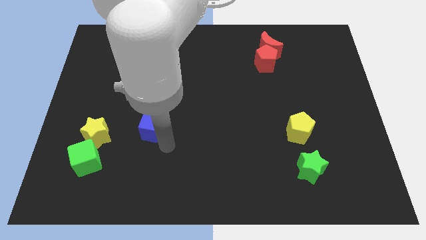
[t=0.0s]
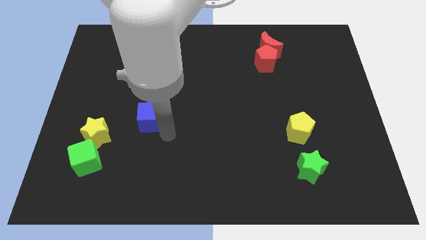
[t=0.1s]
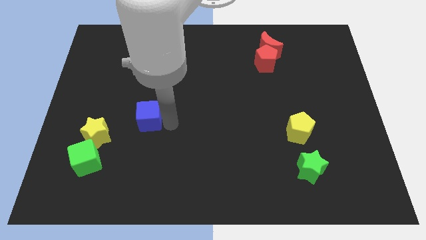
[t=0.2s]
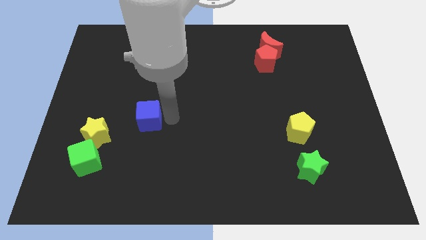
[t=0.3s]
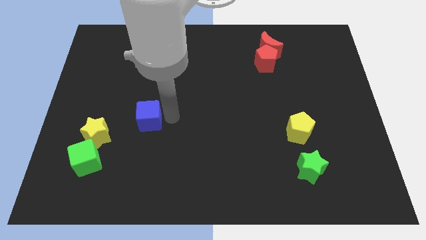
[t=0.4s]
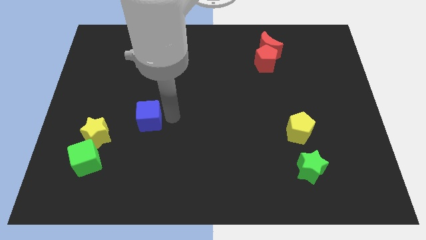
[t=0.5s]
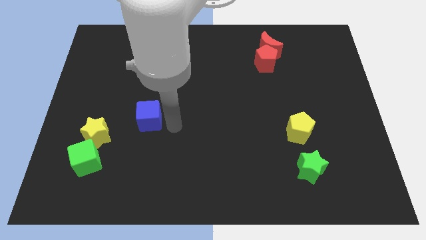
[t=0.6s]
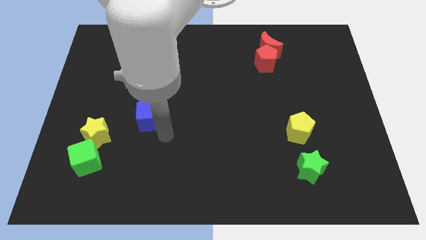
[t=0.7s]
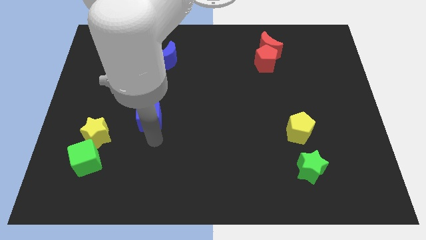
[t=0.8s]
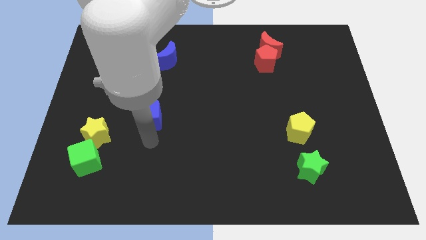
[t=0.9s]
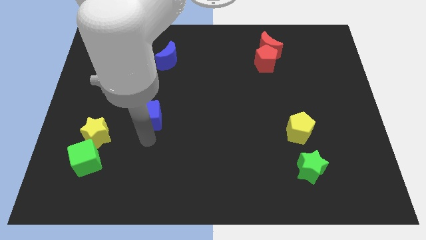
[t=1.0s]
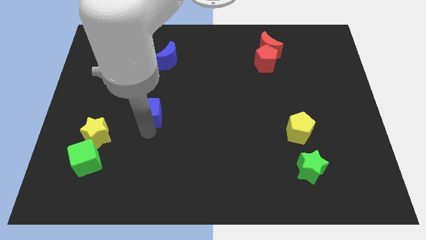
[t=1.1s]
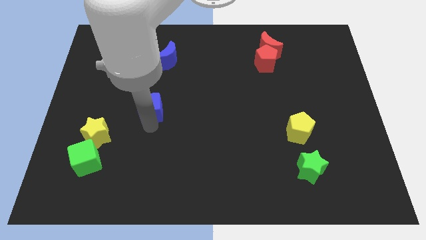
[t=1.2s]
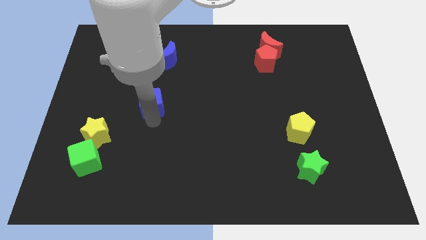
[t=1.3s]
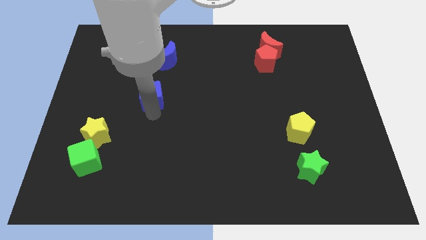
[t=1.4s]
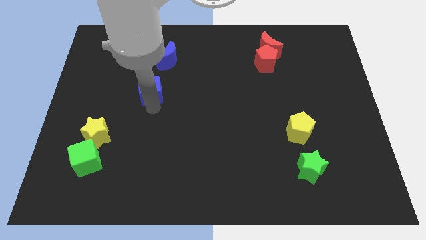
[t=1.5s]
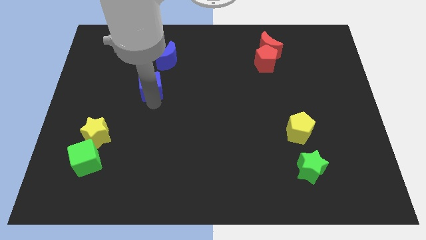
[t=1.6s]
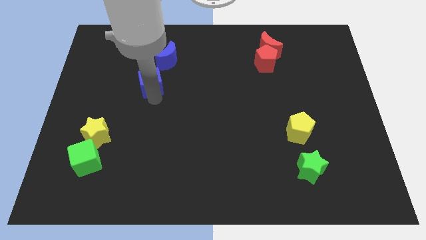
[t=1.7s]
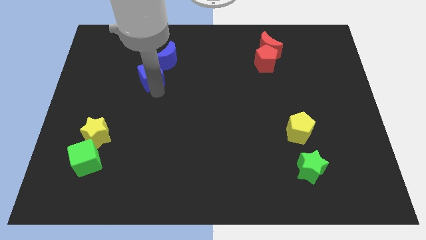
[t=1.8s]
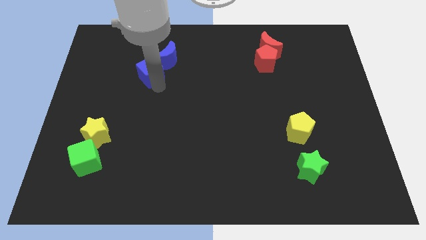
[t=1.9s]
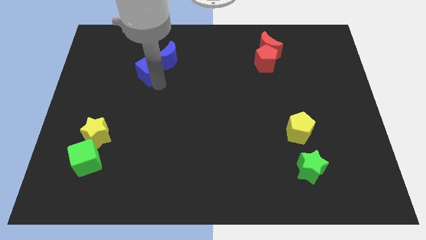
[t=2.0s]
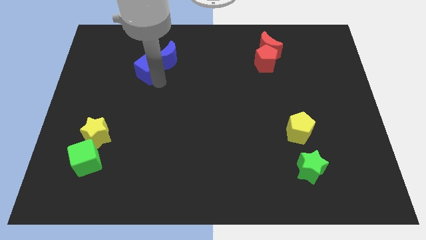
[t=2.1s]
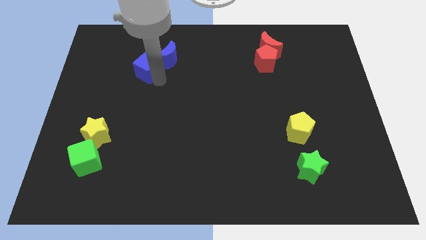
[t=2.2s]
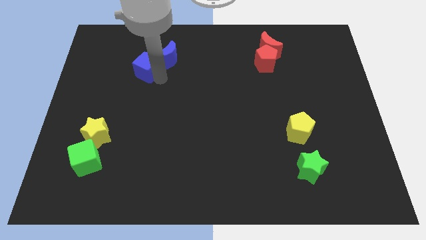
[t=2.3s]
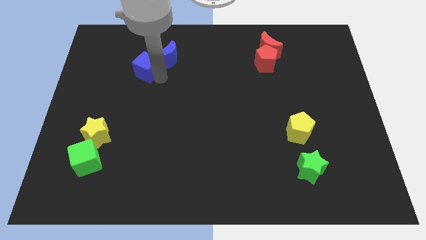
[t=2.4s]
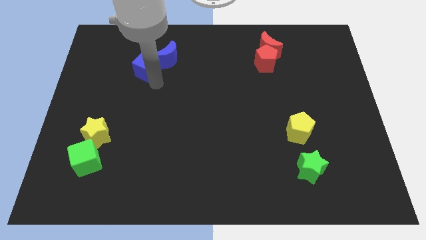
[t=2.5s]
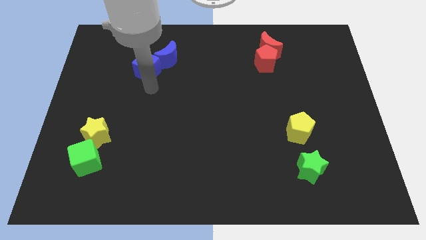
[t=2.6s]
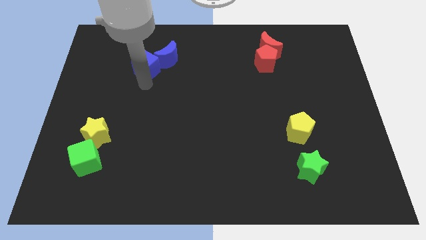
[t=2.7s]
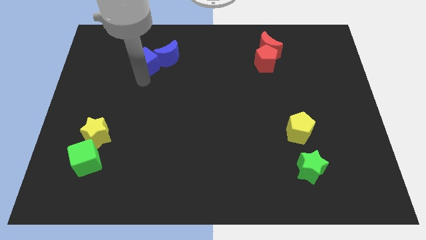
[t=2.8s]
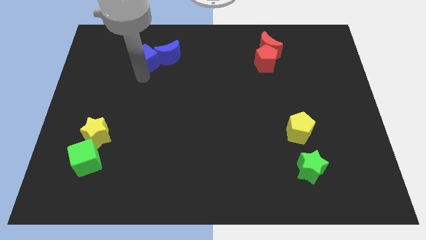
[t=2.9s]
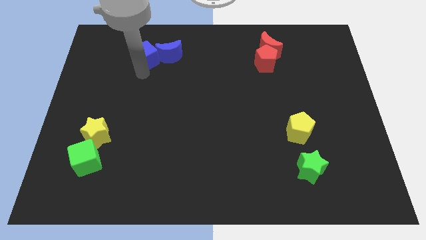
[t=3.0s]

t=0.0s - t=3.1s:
push blue cube in to blue moon

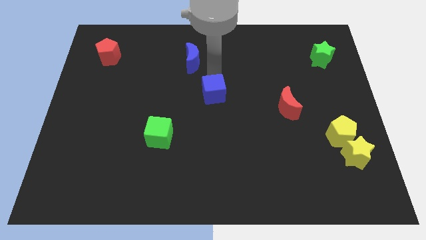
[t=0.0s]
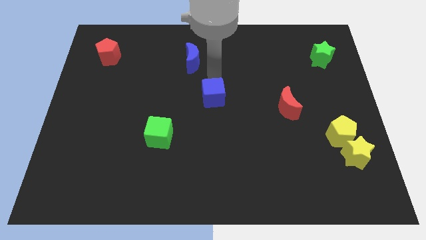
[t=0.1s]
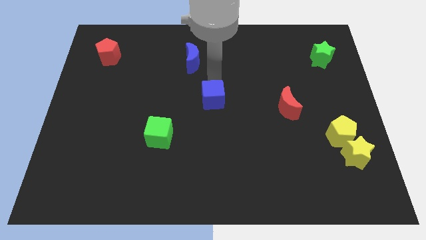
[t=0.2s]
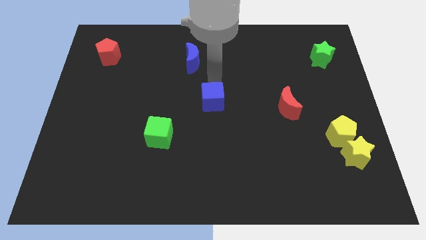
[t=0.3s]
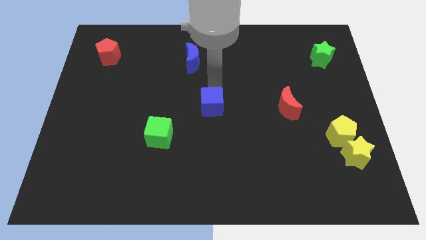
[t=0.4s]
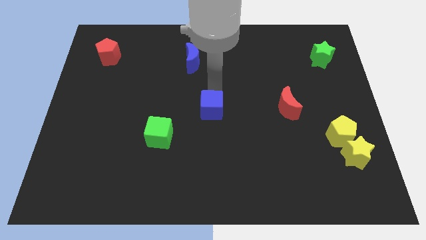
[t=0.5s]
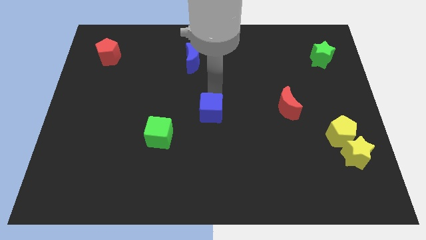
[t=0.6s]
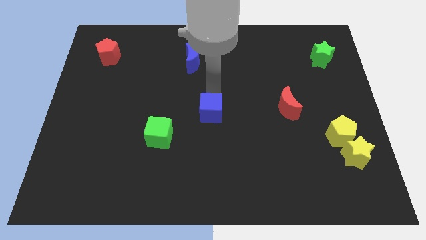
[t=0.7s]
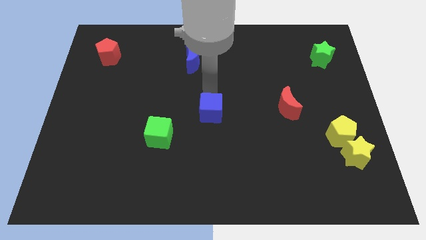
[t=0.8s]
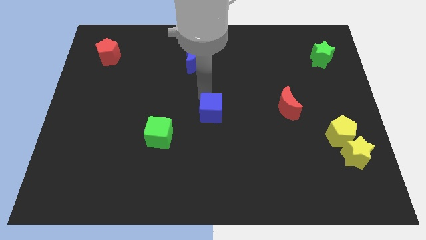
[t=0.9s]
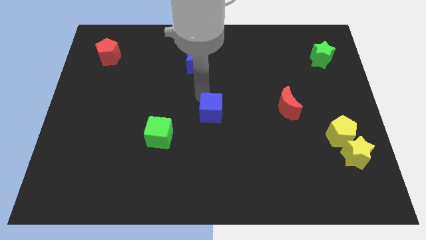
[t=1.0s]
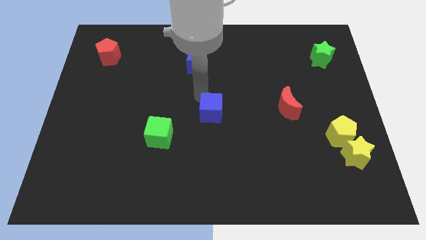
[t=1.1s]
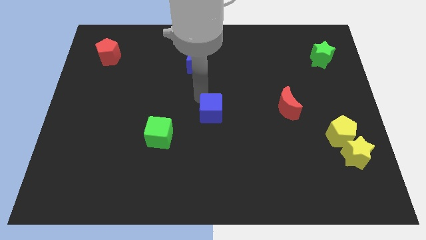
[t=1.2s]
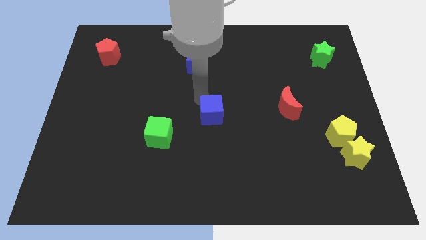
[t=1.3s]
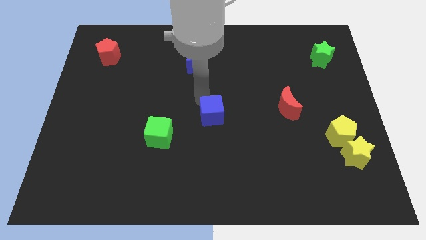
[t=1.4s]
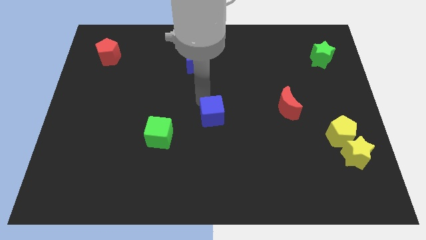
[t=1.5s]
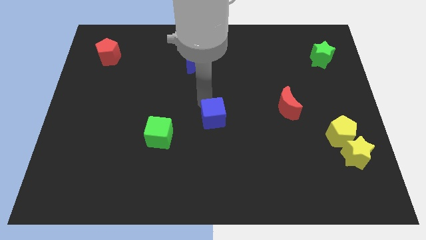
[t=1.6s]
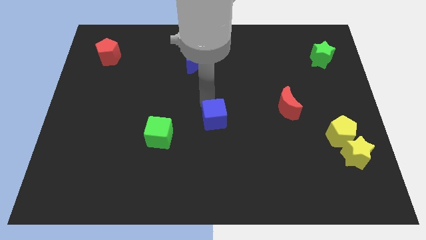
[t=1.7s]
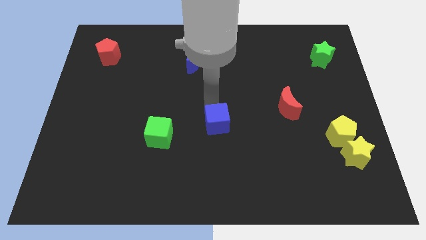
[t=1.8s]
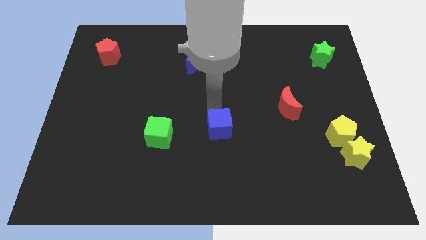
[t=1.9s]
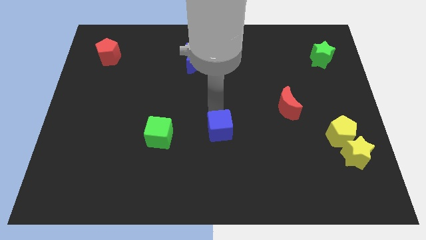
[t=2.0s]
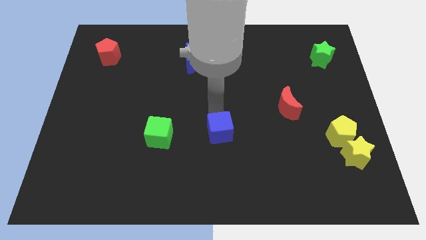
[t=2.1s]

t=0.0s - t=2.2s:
place the blue cube horizontally to right side of the green cube

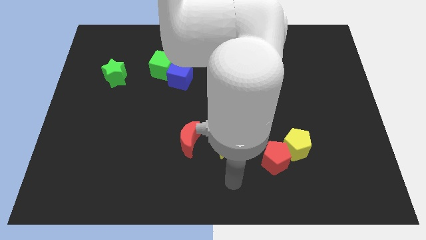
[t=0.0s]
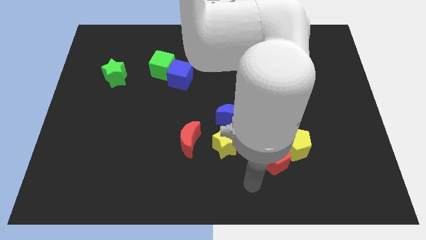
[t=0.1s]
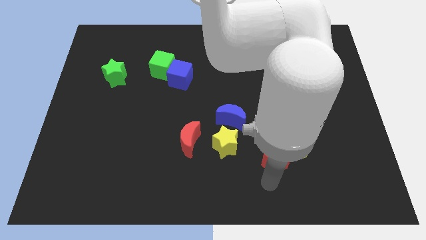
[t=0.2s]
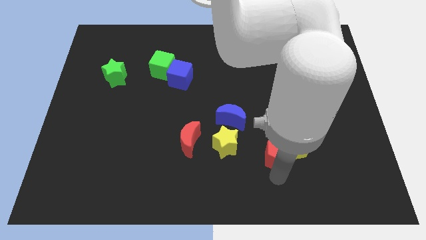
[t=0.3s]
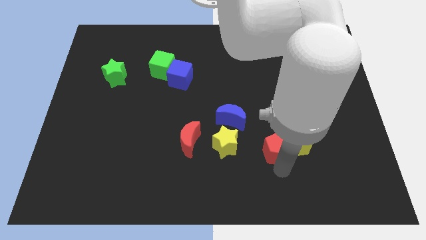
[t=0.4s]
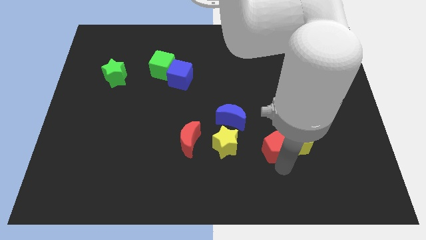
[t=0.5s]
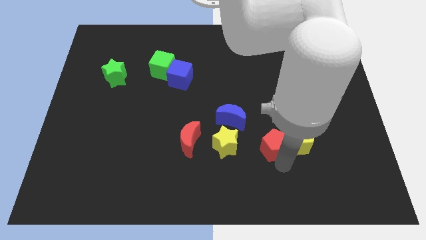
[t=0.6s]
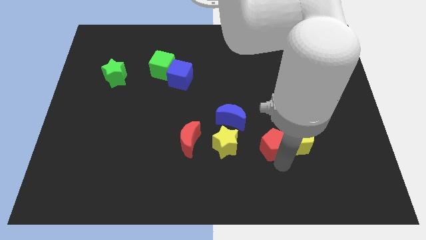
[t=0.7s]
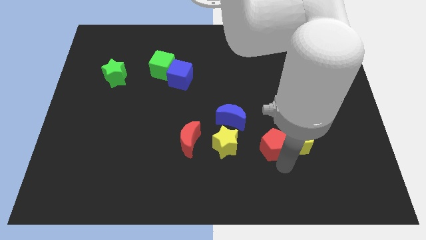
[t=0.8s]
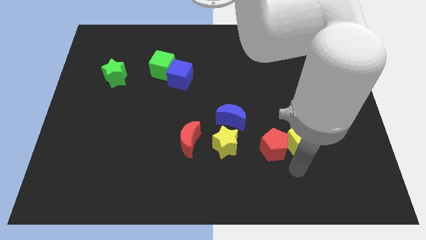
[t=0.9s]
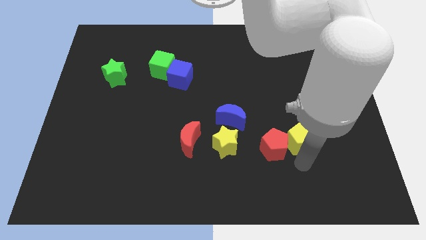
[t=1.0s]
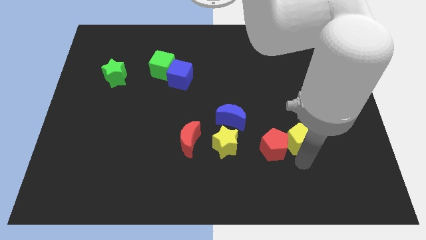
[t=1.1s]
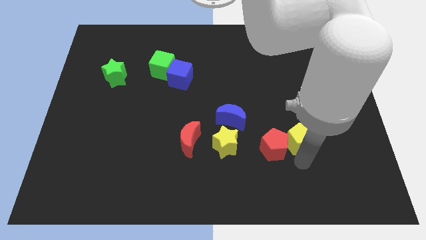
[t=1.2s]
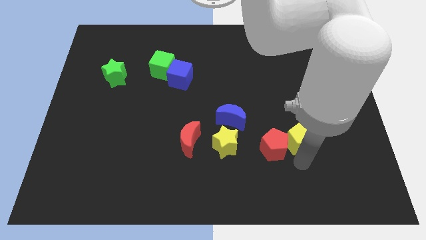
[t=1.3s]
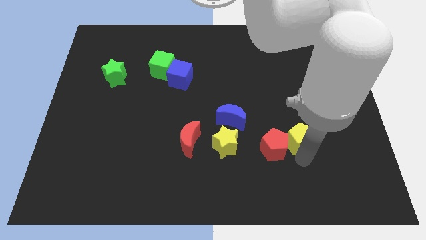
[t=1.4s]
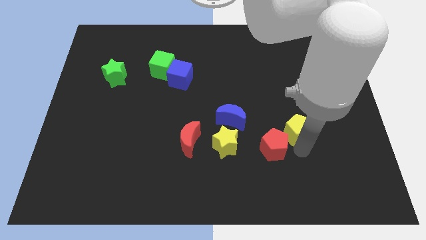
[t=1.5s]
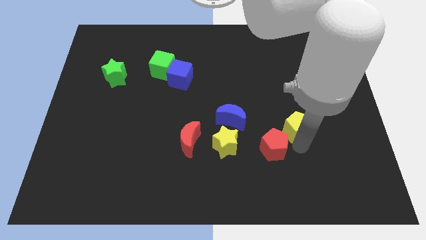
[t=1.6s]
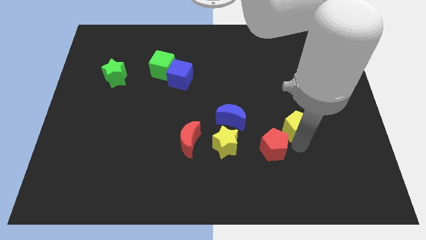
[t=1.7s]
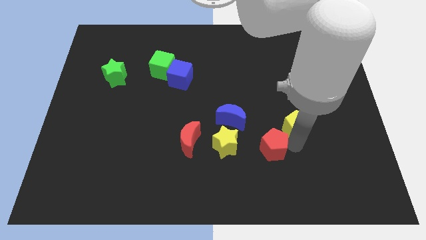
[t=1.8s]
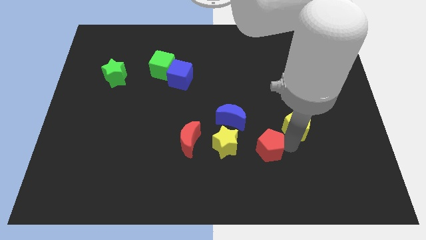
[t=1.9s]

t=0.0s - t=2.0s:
move arm between yellow and red pentagon

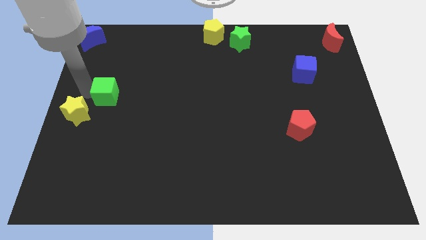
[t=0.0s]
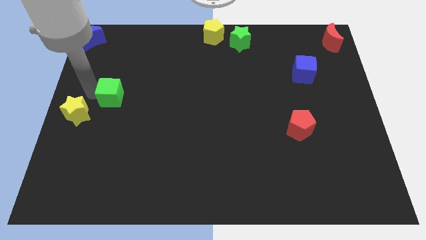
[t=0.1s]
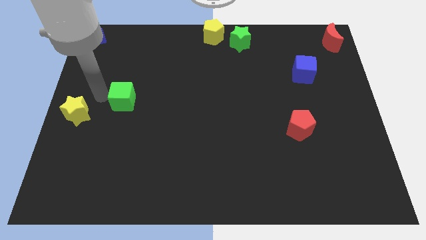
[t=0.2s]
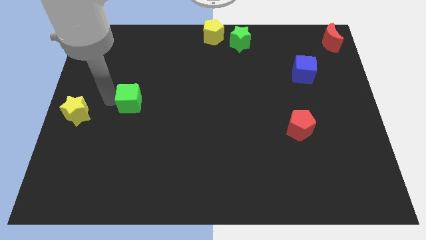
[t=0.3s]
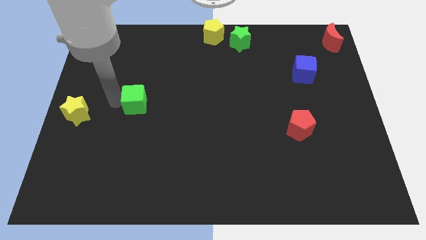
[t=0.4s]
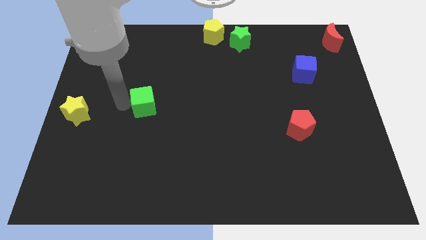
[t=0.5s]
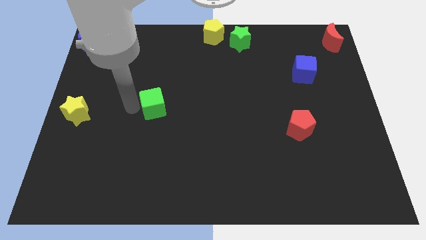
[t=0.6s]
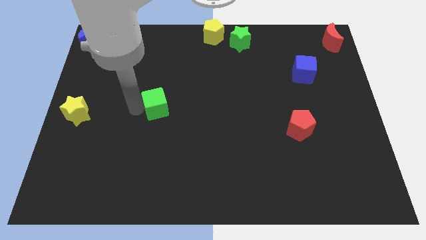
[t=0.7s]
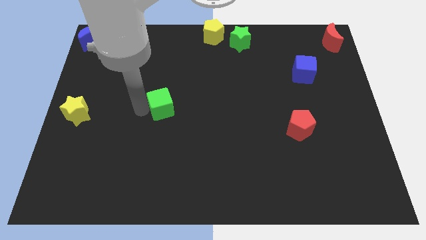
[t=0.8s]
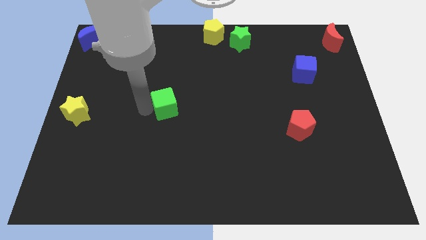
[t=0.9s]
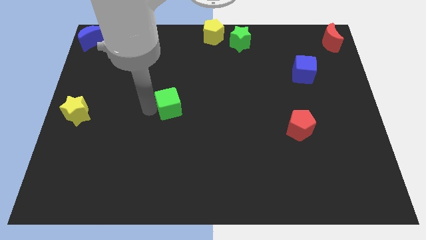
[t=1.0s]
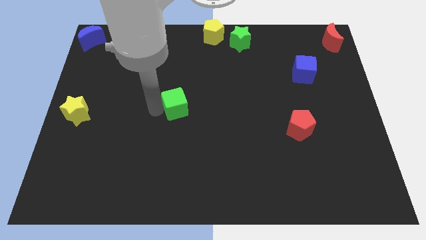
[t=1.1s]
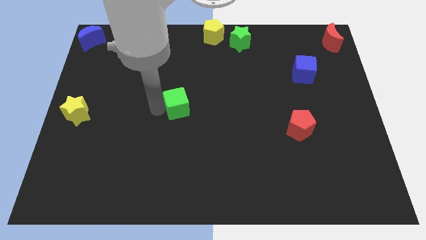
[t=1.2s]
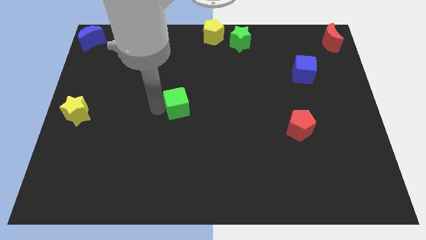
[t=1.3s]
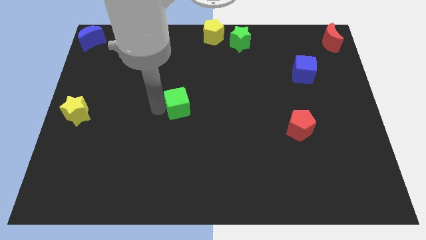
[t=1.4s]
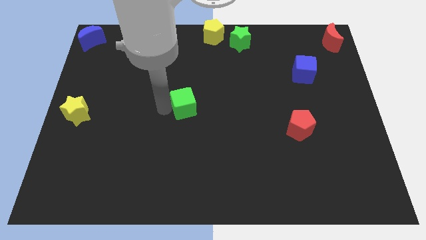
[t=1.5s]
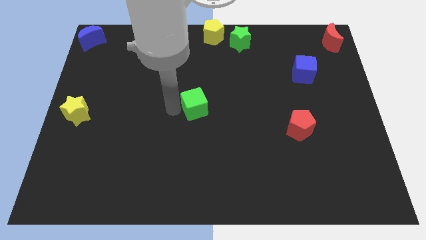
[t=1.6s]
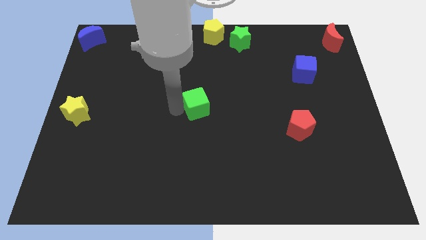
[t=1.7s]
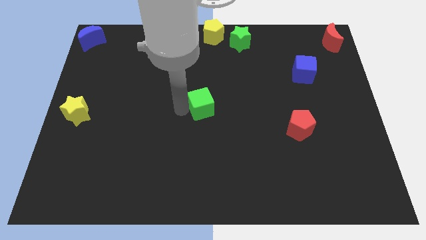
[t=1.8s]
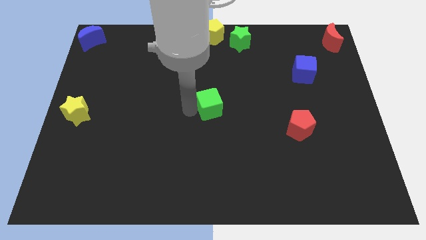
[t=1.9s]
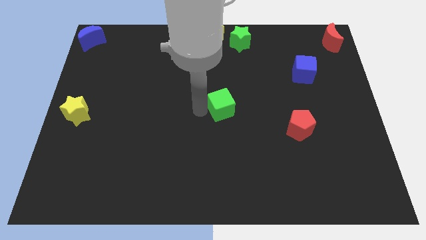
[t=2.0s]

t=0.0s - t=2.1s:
push the green cube to the center of the board
